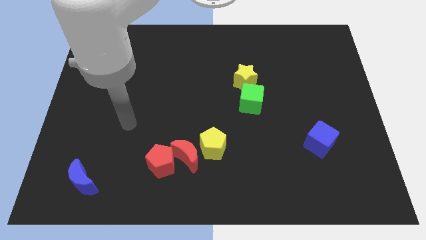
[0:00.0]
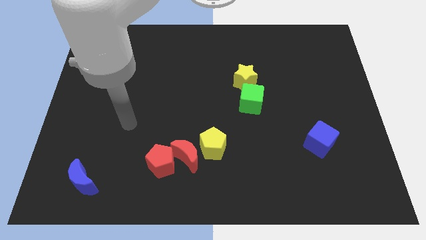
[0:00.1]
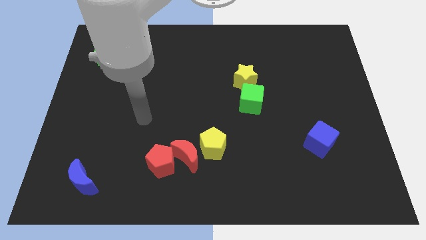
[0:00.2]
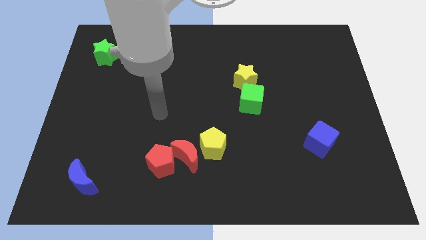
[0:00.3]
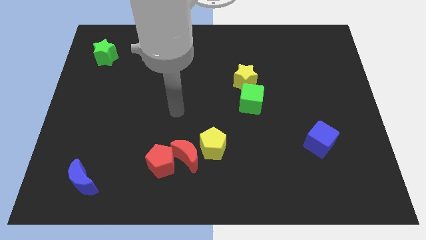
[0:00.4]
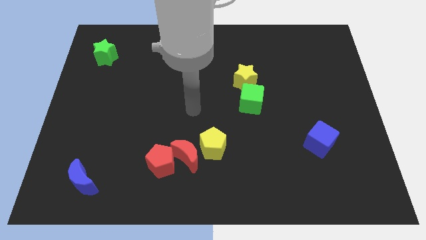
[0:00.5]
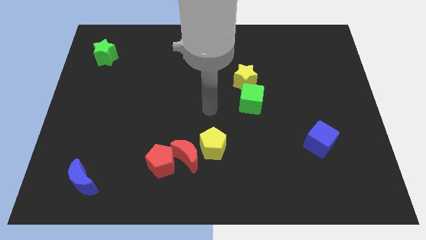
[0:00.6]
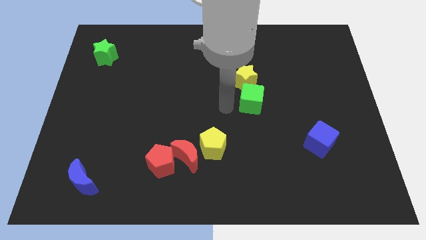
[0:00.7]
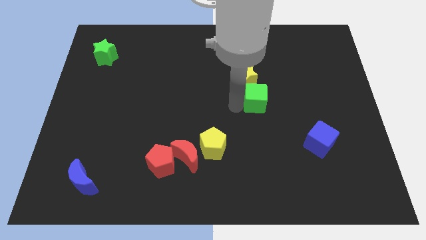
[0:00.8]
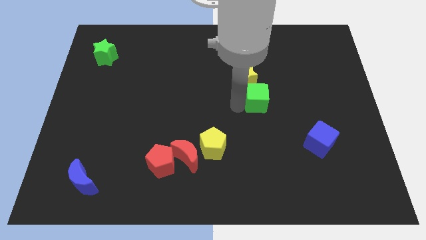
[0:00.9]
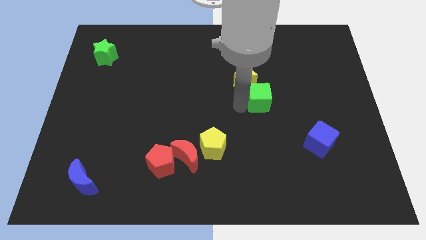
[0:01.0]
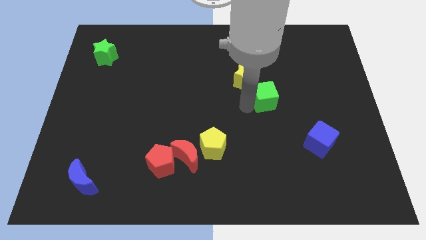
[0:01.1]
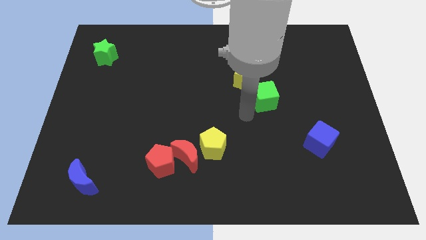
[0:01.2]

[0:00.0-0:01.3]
hit the green cube with arm

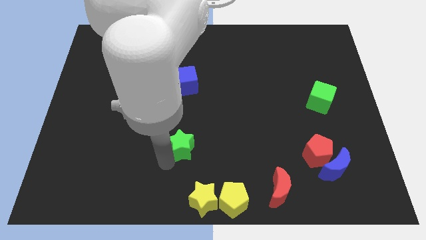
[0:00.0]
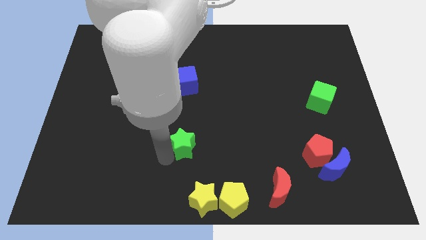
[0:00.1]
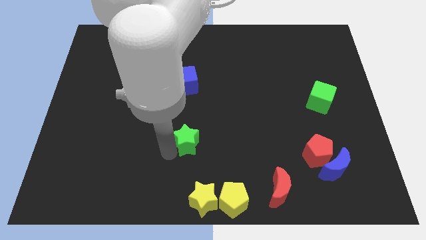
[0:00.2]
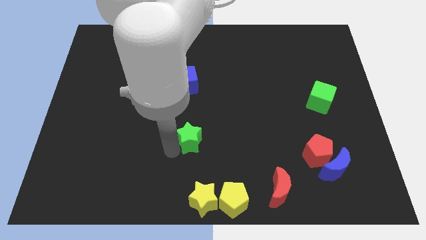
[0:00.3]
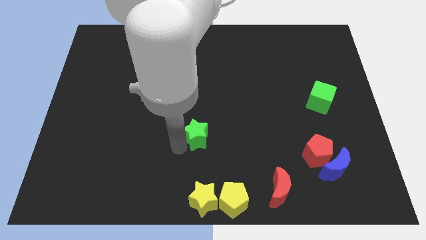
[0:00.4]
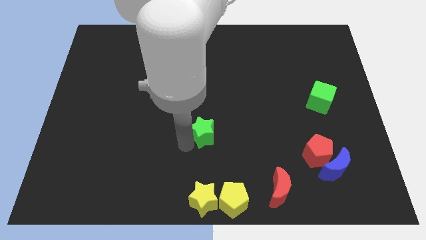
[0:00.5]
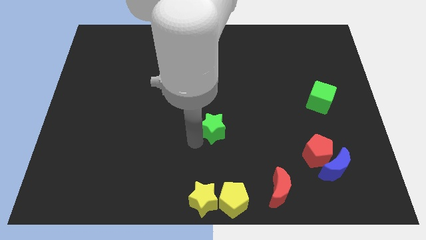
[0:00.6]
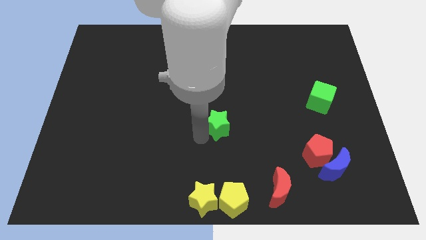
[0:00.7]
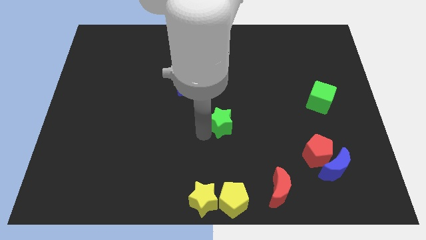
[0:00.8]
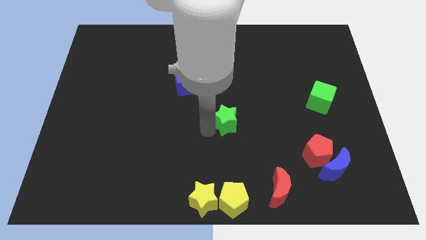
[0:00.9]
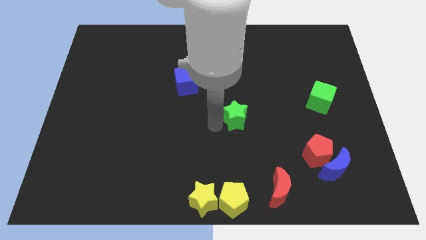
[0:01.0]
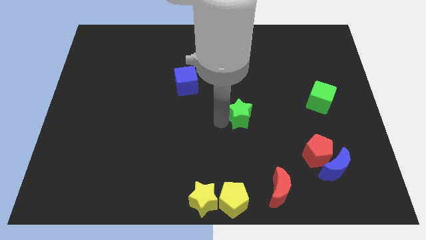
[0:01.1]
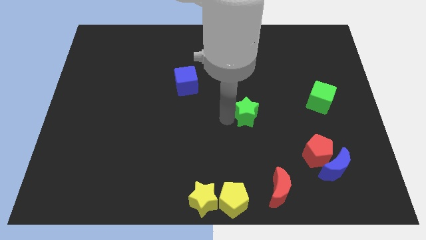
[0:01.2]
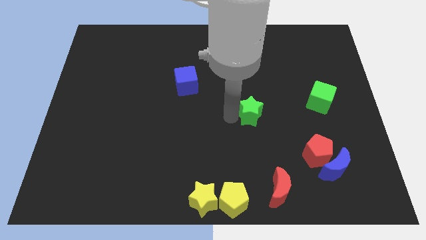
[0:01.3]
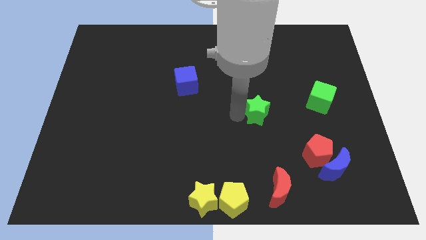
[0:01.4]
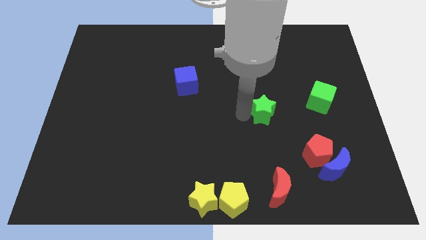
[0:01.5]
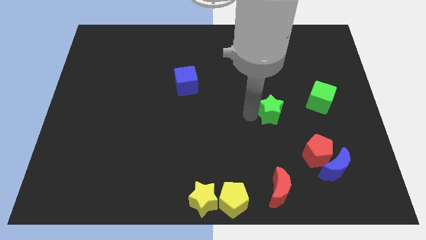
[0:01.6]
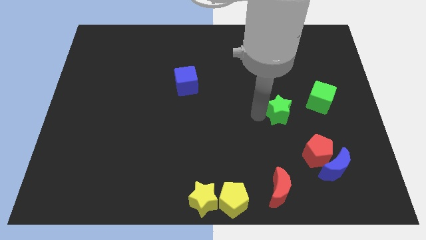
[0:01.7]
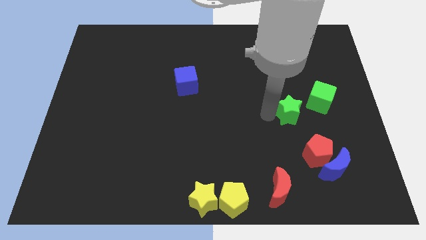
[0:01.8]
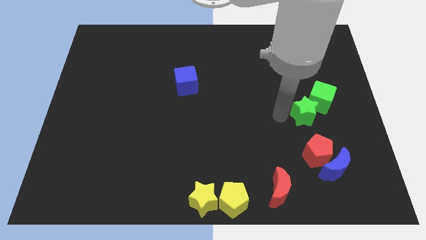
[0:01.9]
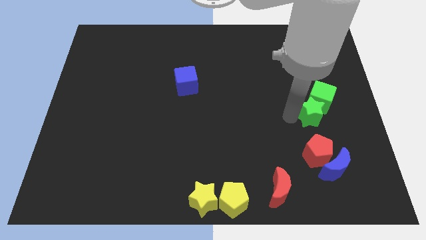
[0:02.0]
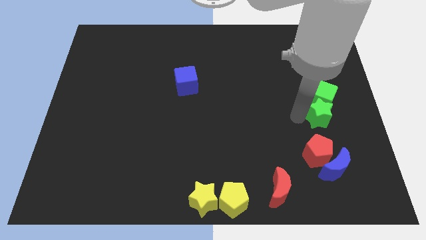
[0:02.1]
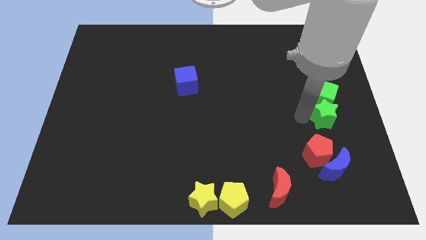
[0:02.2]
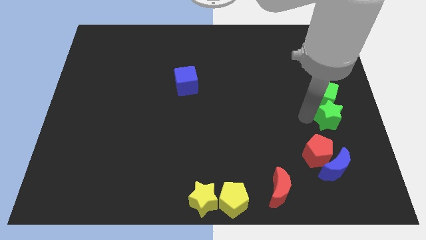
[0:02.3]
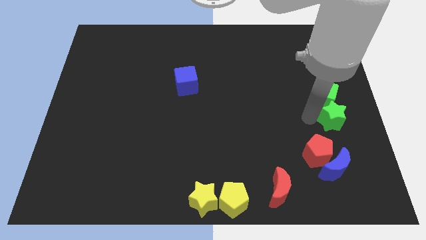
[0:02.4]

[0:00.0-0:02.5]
push the green star to the bottom of the green cube

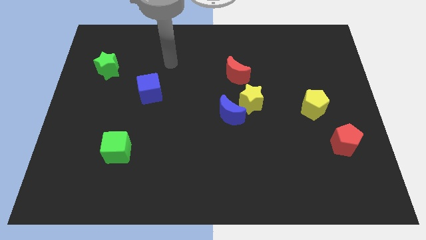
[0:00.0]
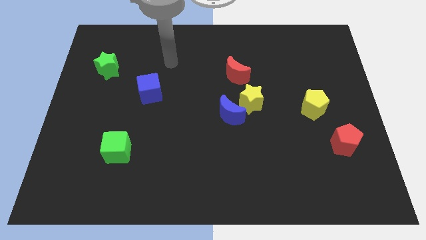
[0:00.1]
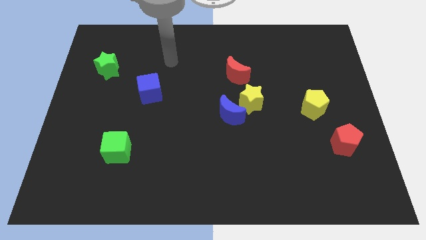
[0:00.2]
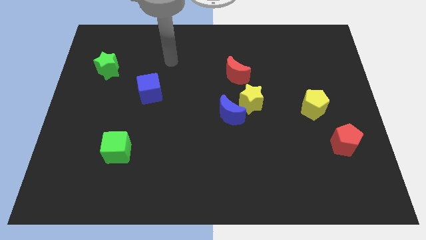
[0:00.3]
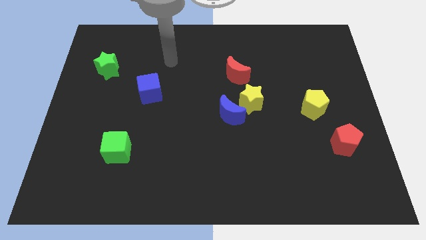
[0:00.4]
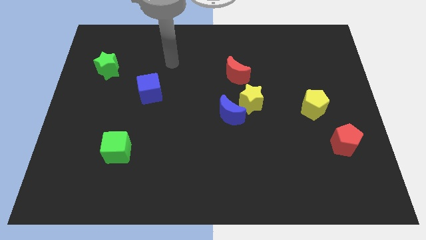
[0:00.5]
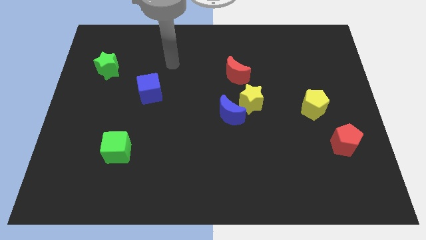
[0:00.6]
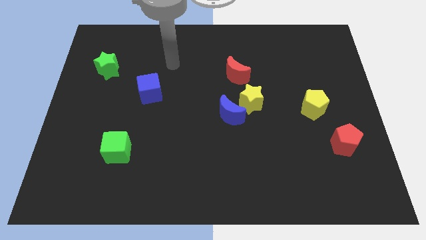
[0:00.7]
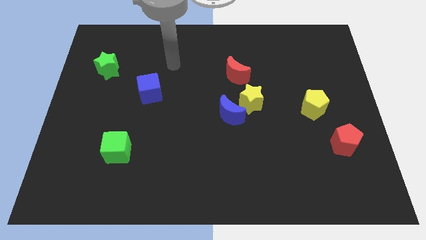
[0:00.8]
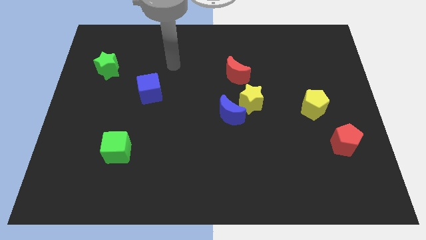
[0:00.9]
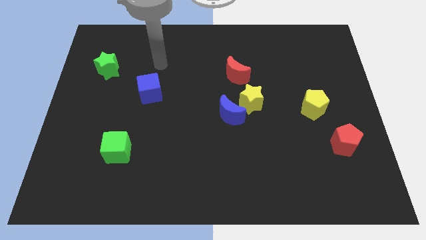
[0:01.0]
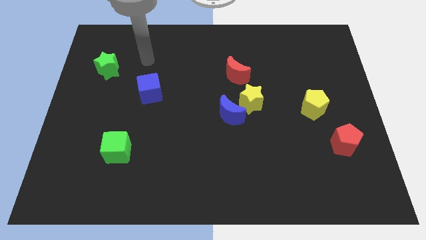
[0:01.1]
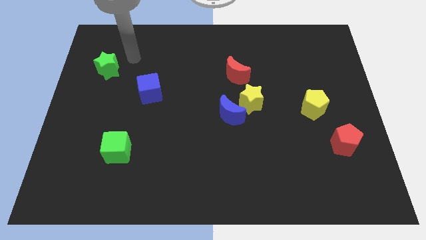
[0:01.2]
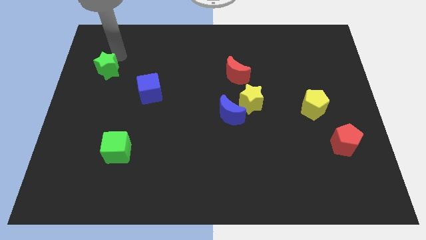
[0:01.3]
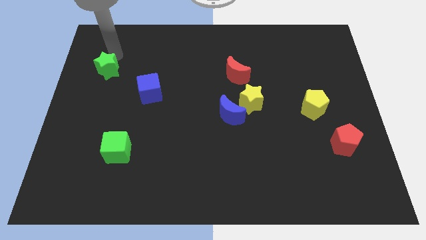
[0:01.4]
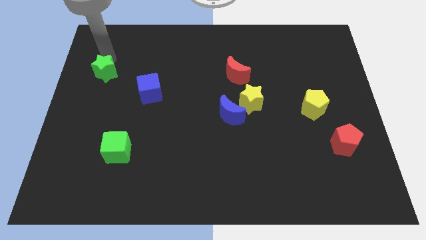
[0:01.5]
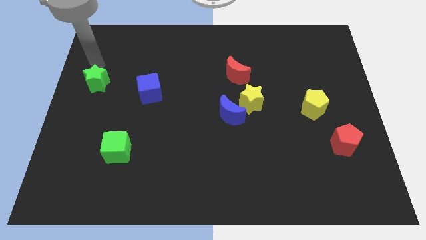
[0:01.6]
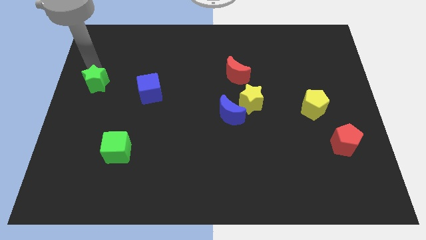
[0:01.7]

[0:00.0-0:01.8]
move the green star slightly to the bottom

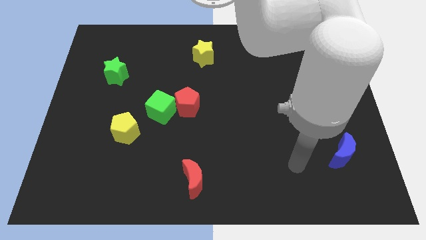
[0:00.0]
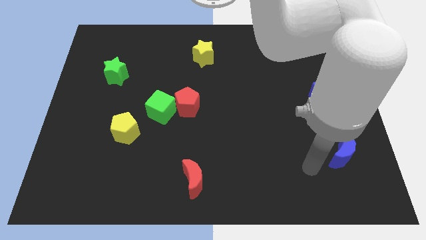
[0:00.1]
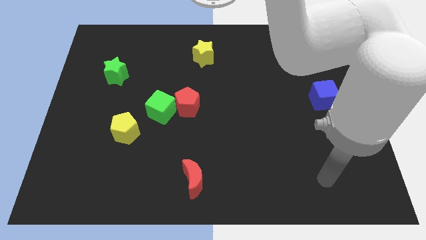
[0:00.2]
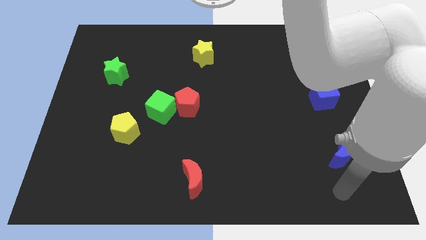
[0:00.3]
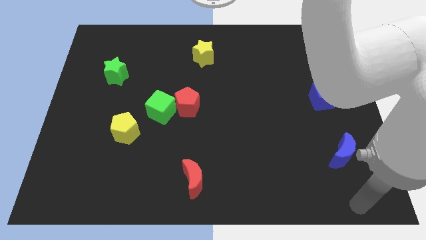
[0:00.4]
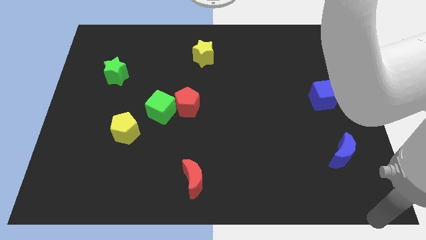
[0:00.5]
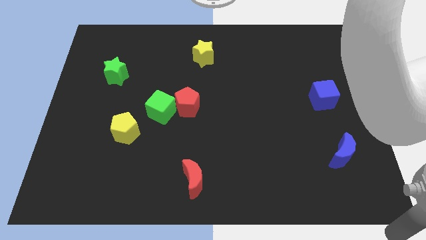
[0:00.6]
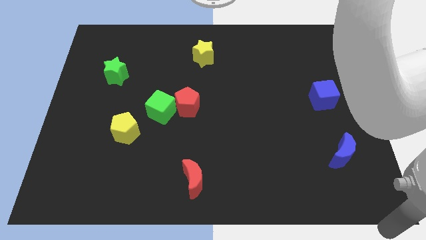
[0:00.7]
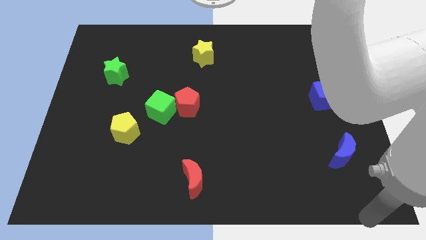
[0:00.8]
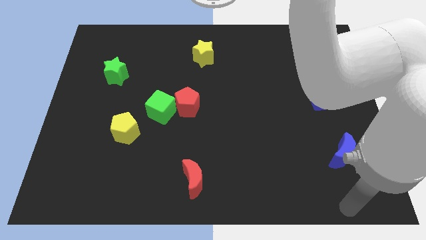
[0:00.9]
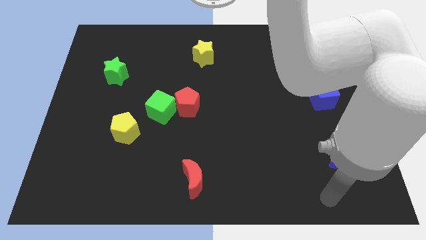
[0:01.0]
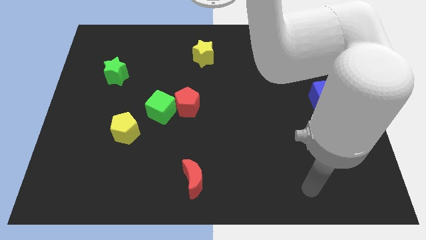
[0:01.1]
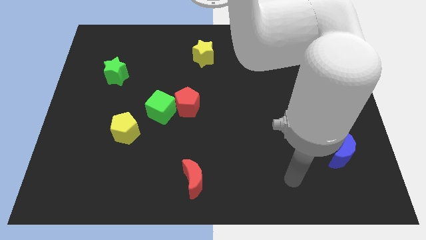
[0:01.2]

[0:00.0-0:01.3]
point your arm on the bottom side of the blue moon

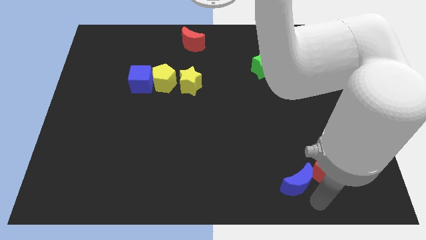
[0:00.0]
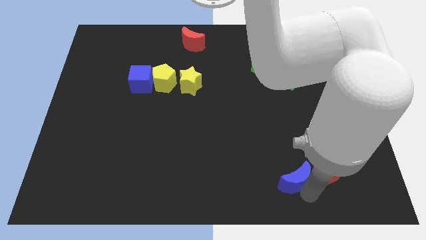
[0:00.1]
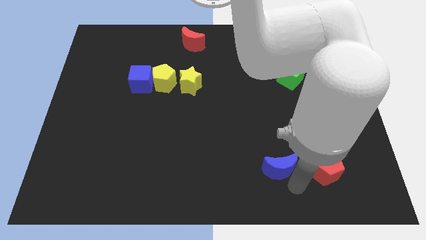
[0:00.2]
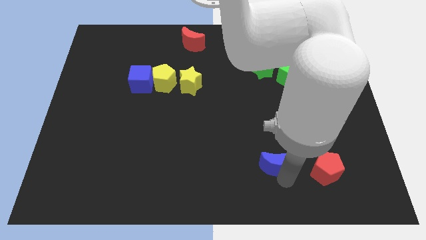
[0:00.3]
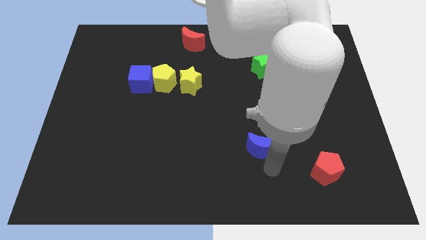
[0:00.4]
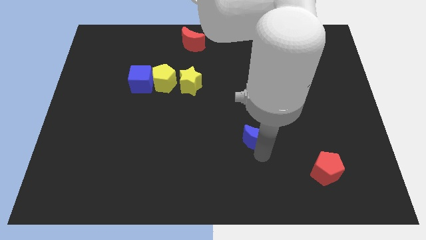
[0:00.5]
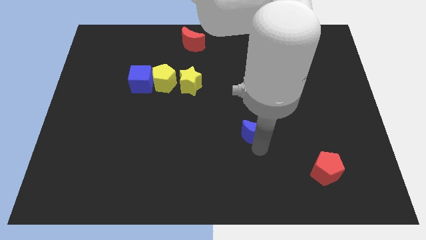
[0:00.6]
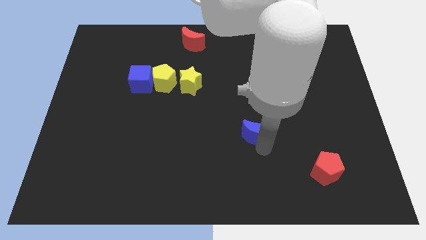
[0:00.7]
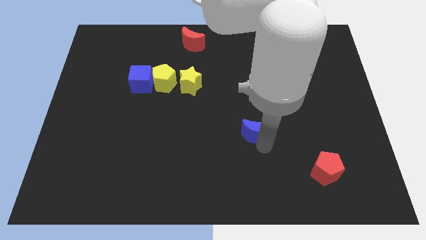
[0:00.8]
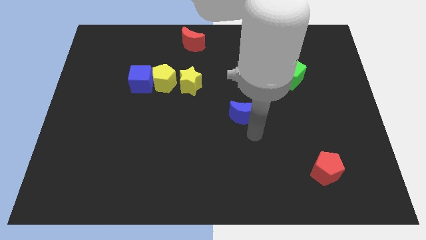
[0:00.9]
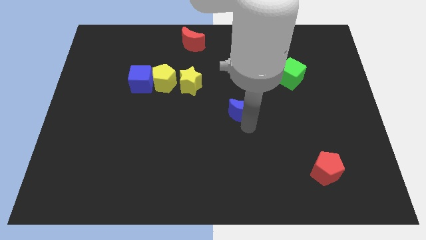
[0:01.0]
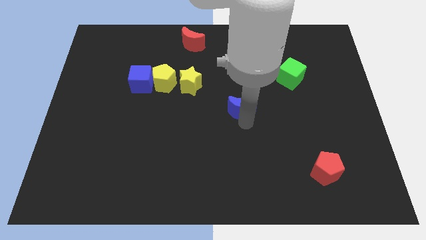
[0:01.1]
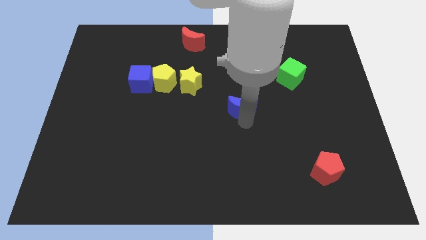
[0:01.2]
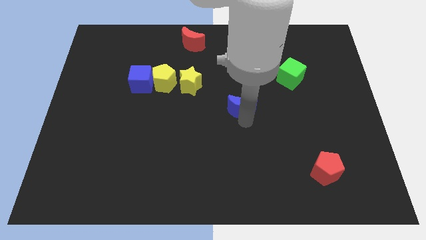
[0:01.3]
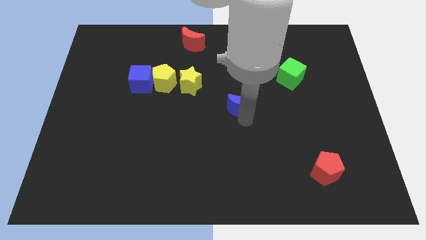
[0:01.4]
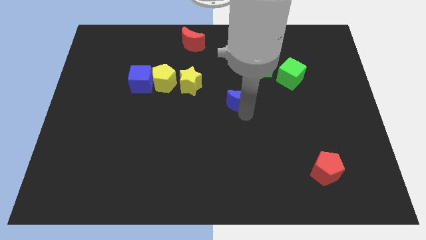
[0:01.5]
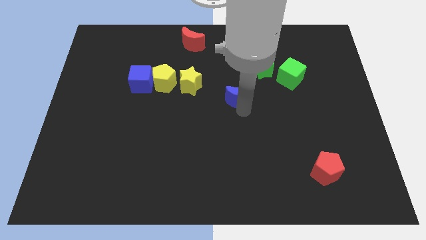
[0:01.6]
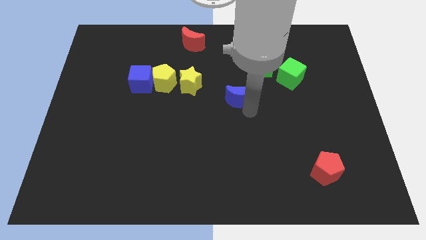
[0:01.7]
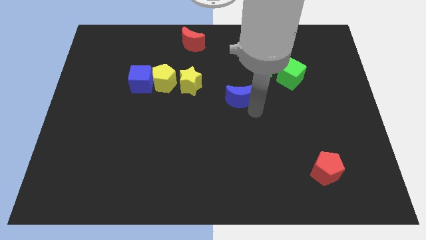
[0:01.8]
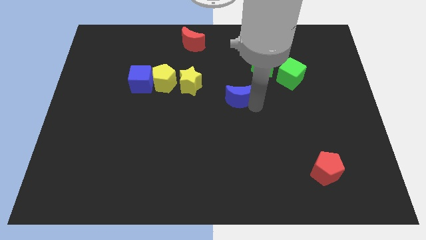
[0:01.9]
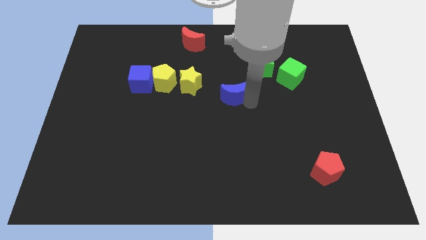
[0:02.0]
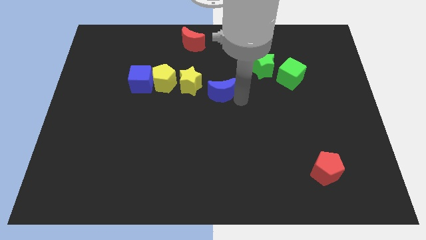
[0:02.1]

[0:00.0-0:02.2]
move the blue crescent towards top
